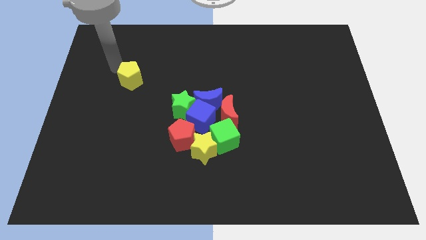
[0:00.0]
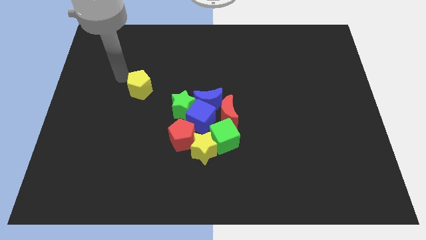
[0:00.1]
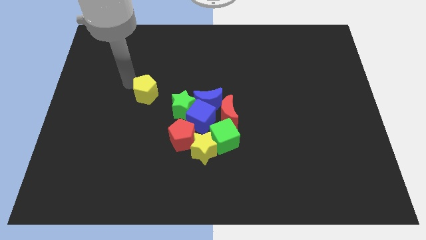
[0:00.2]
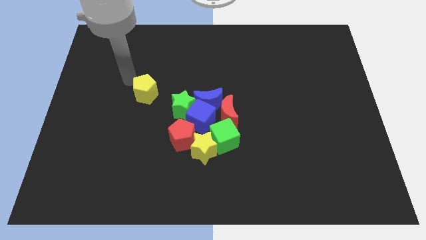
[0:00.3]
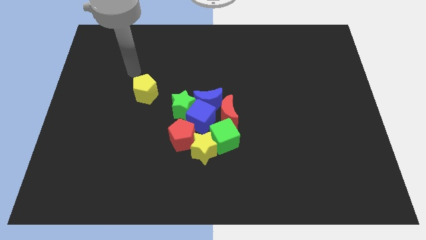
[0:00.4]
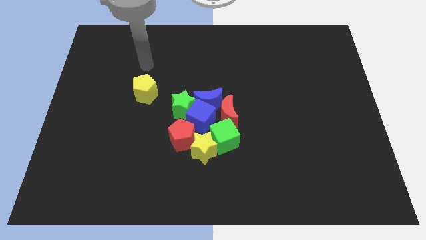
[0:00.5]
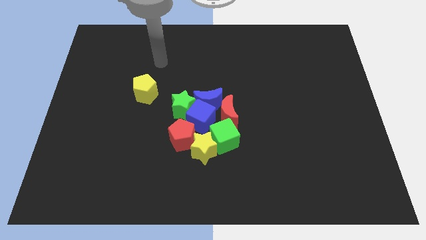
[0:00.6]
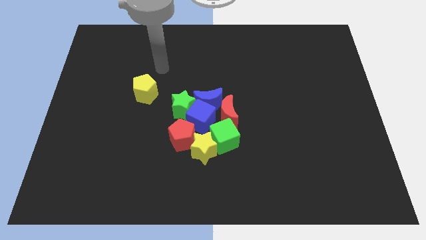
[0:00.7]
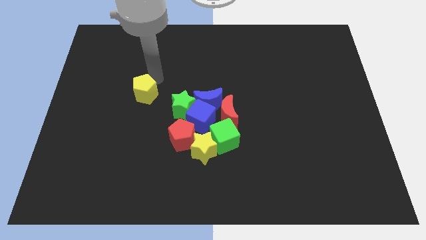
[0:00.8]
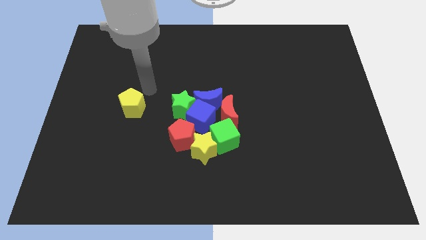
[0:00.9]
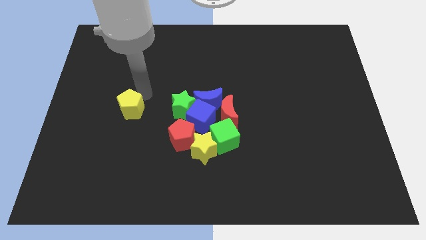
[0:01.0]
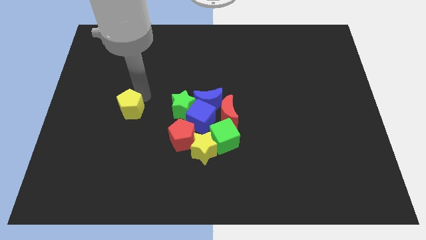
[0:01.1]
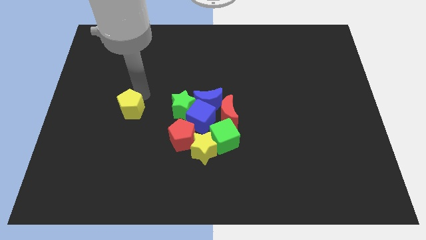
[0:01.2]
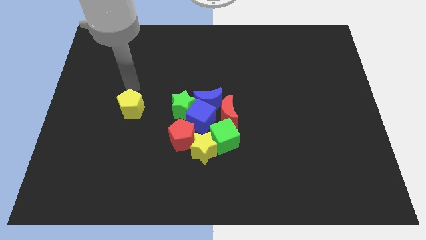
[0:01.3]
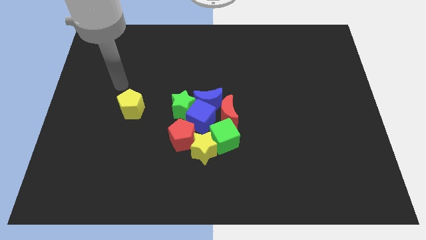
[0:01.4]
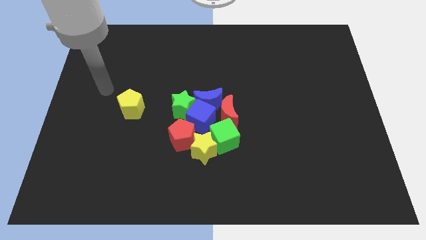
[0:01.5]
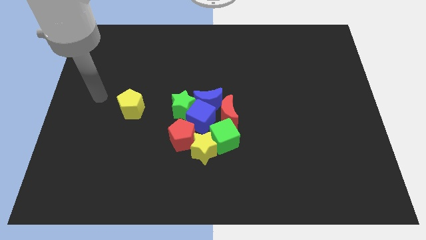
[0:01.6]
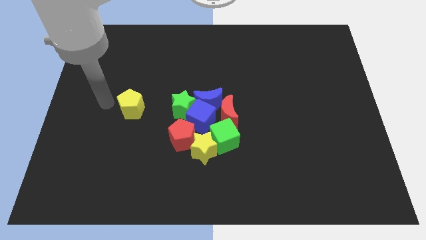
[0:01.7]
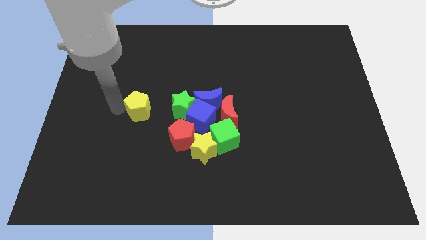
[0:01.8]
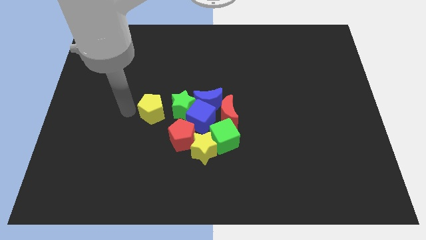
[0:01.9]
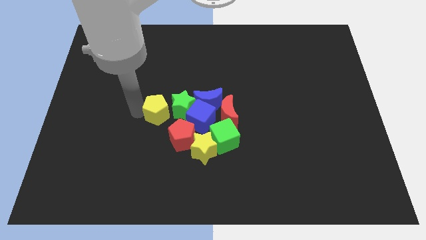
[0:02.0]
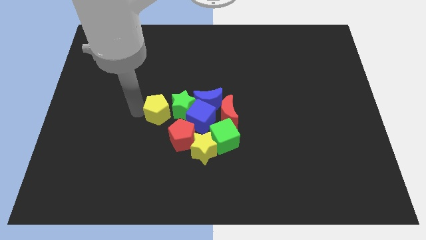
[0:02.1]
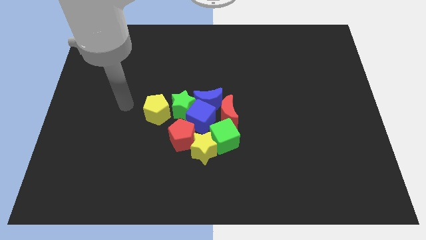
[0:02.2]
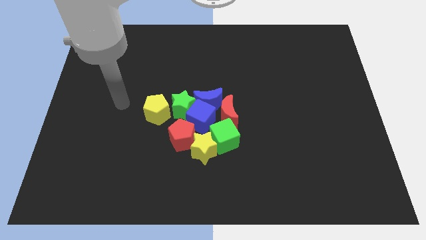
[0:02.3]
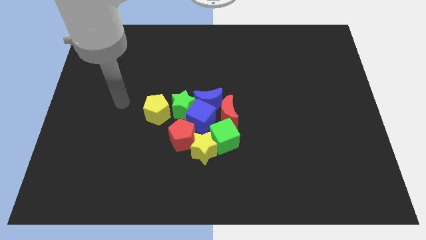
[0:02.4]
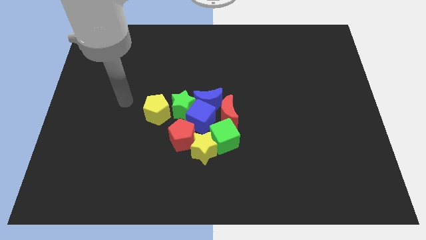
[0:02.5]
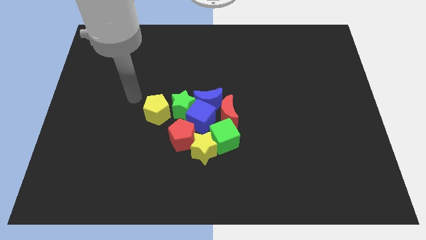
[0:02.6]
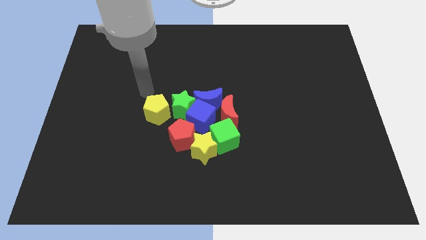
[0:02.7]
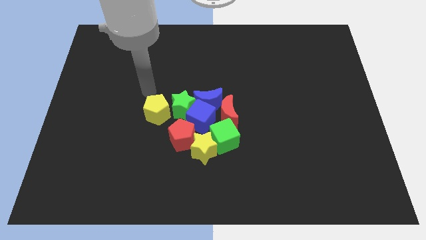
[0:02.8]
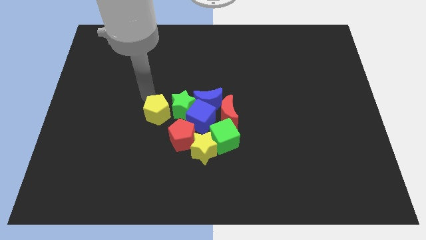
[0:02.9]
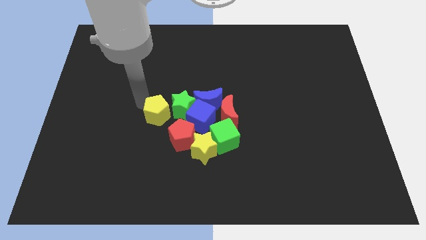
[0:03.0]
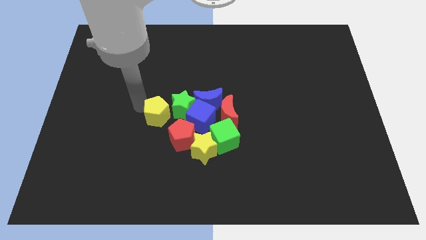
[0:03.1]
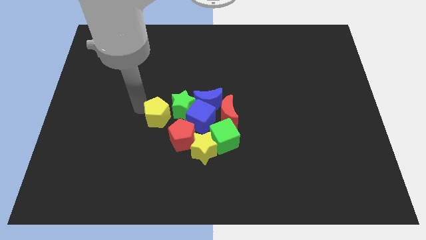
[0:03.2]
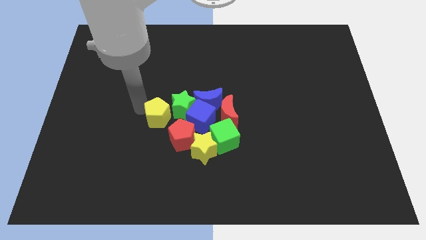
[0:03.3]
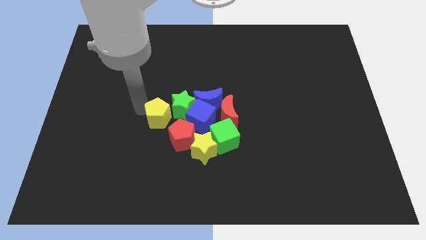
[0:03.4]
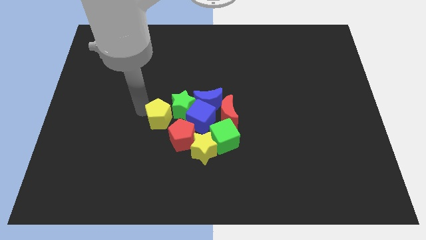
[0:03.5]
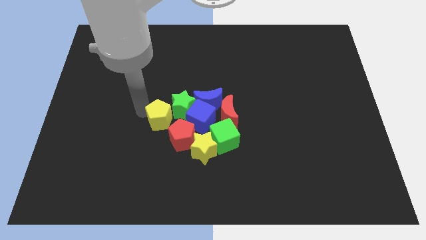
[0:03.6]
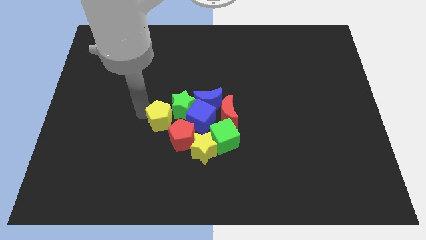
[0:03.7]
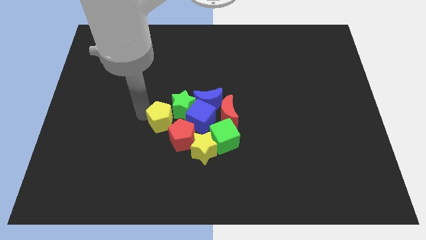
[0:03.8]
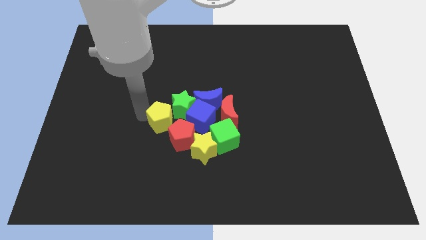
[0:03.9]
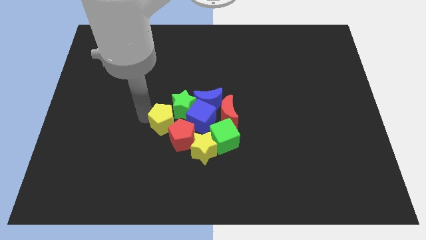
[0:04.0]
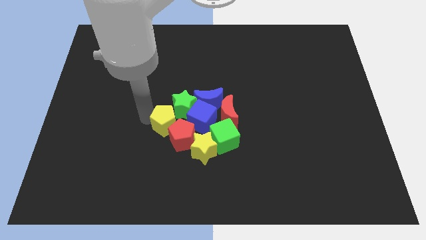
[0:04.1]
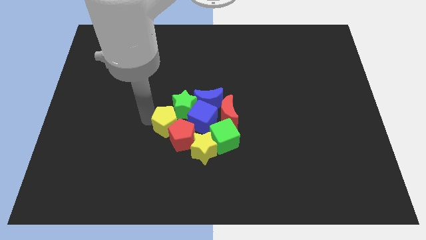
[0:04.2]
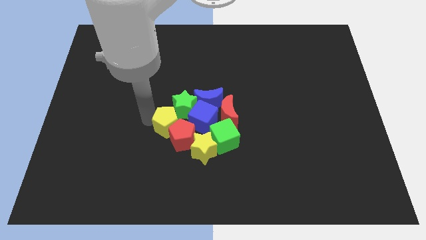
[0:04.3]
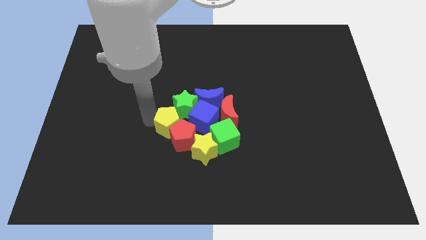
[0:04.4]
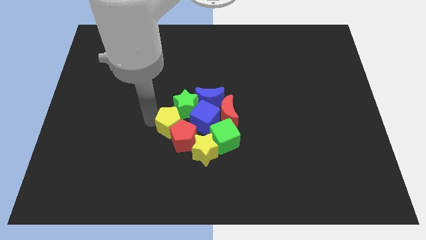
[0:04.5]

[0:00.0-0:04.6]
push the yellow pentagon into the group of blocks

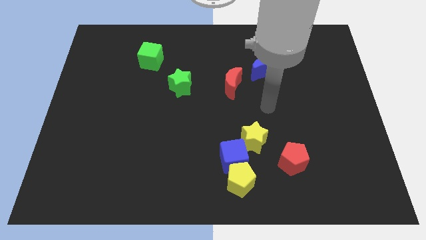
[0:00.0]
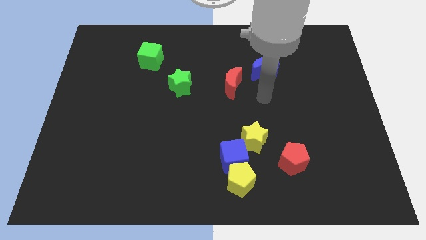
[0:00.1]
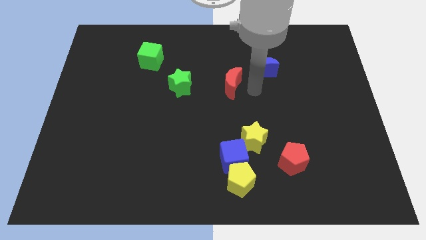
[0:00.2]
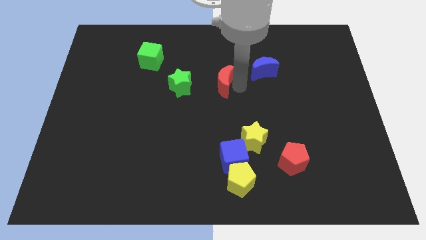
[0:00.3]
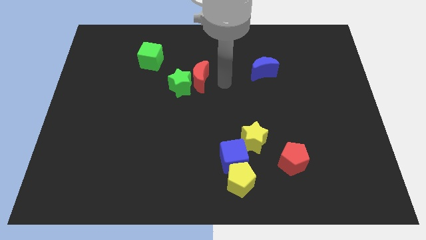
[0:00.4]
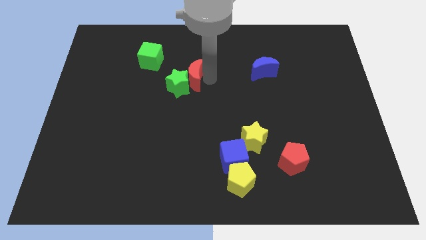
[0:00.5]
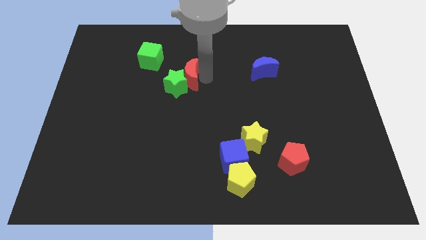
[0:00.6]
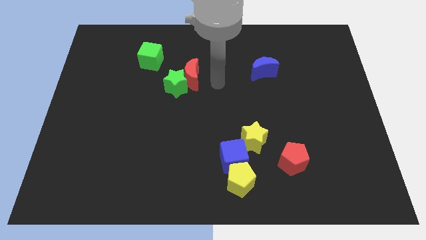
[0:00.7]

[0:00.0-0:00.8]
push red moon in to green star

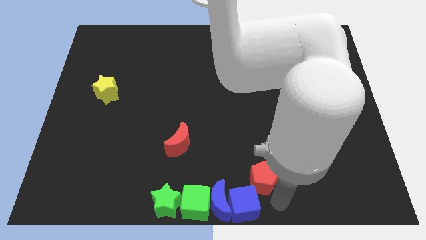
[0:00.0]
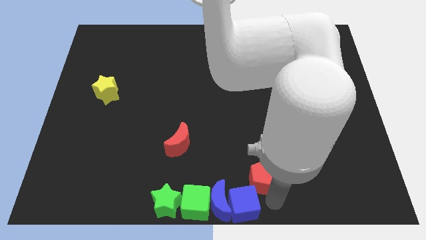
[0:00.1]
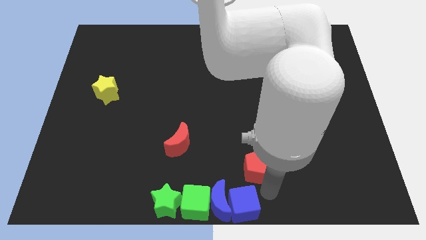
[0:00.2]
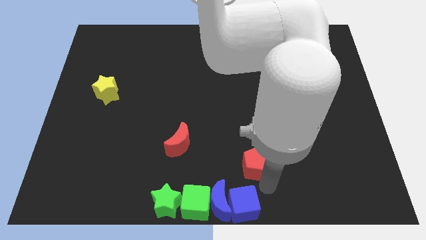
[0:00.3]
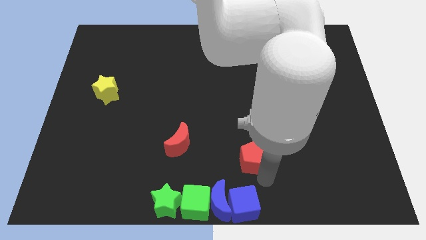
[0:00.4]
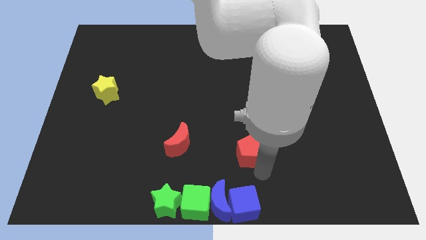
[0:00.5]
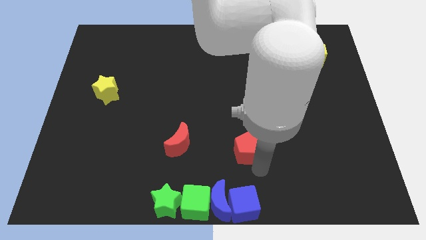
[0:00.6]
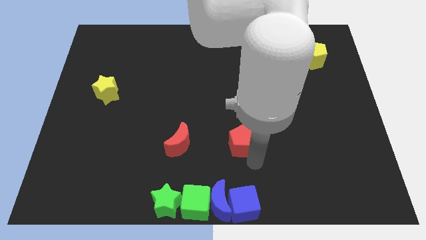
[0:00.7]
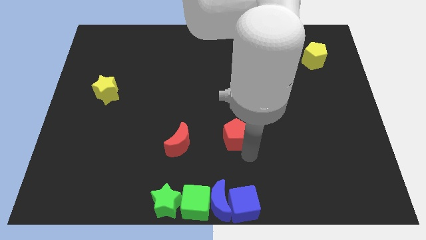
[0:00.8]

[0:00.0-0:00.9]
move the red pentagon to the right of the red crescent

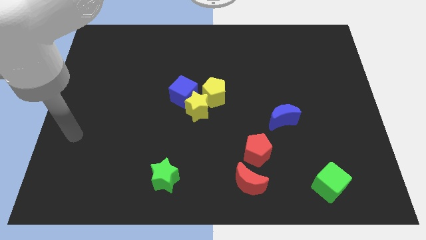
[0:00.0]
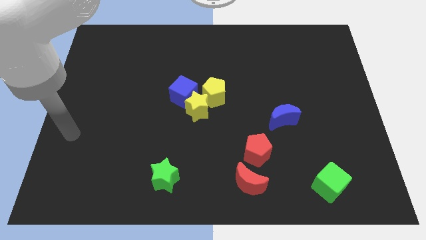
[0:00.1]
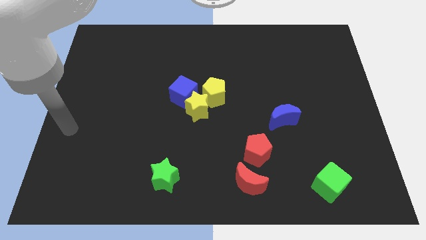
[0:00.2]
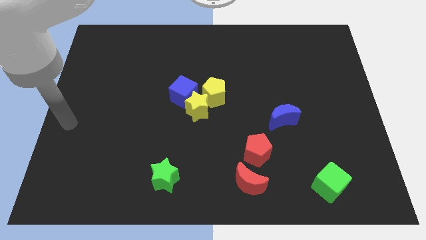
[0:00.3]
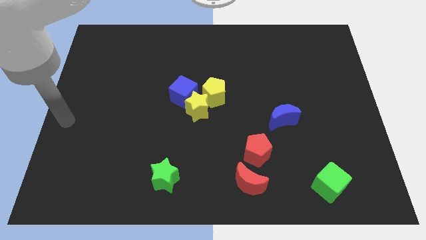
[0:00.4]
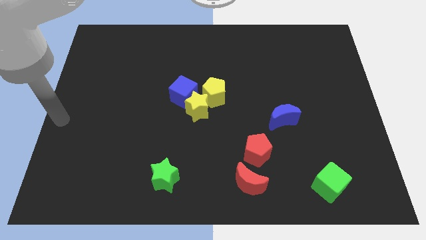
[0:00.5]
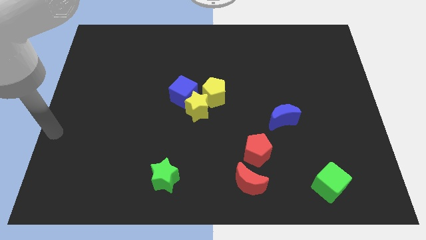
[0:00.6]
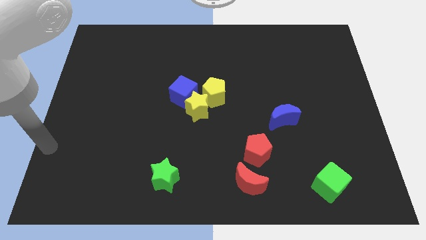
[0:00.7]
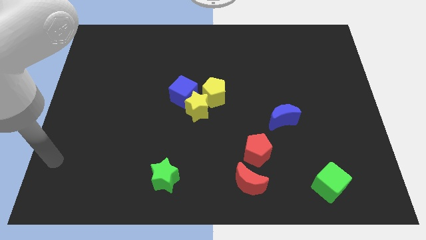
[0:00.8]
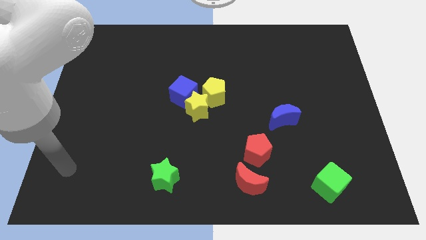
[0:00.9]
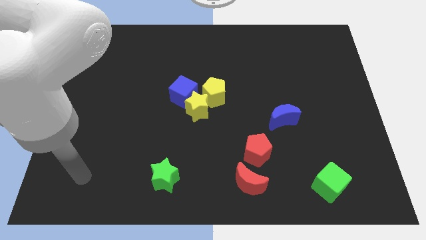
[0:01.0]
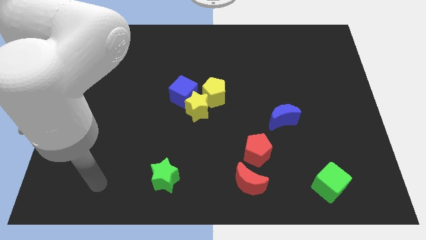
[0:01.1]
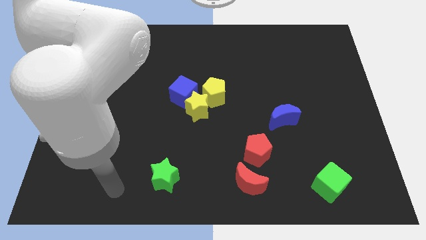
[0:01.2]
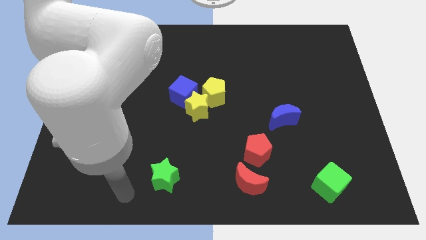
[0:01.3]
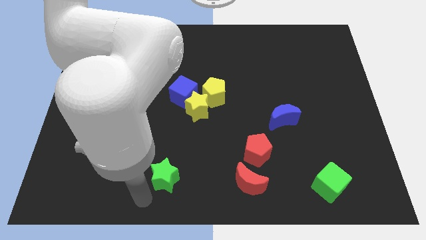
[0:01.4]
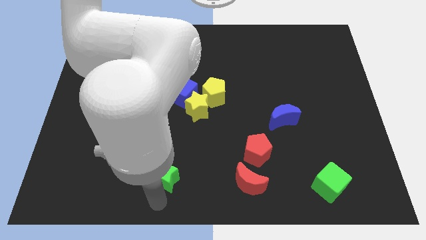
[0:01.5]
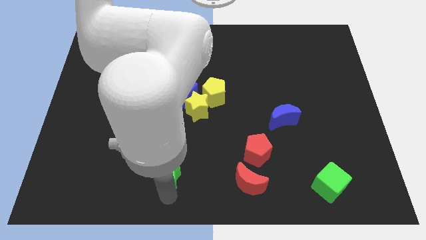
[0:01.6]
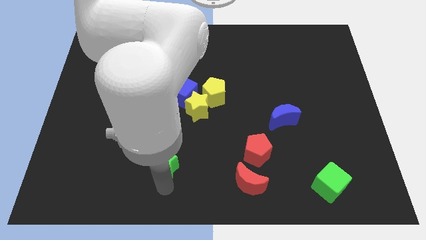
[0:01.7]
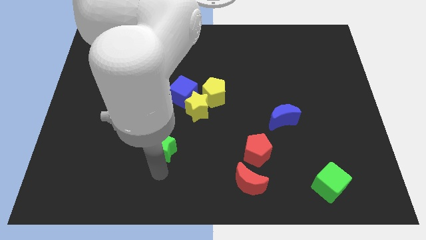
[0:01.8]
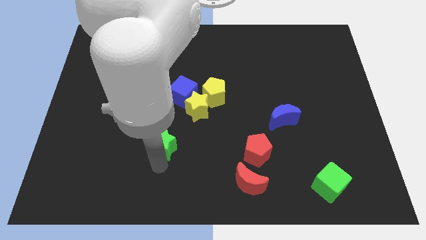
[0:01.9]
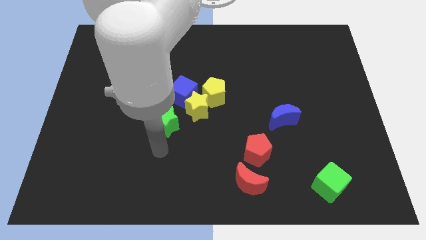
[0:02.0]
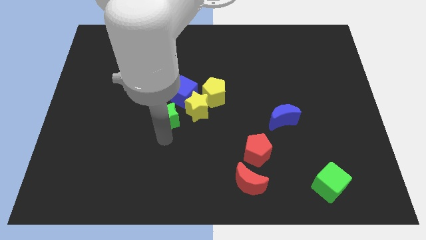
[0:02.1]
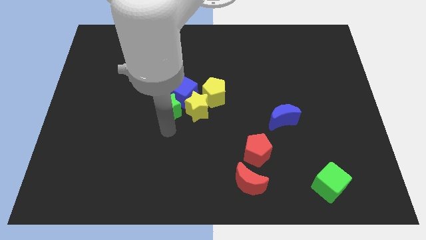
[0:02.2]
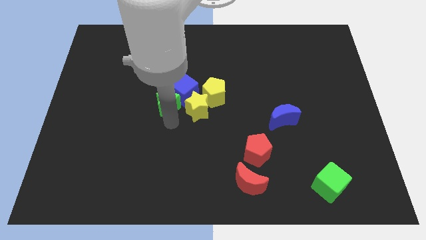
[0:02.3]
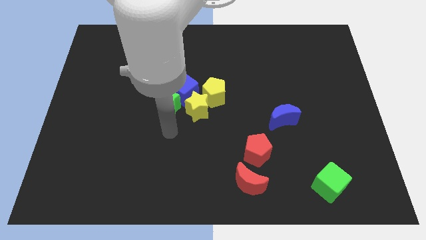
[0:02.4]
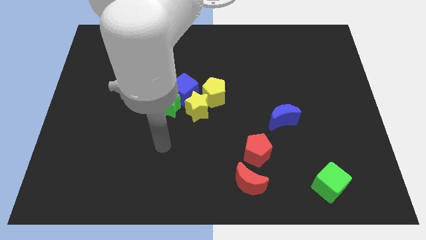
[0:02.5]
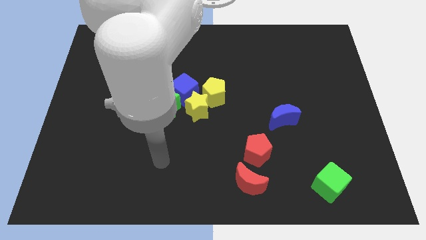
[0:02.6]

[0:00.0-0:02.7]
move the green star to the left side of the yellow star
